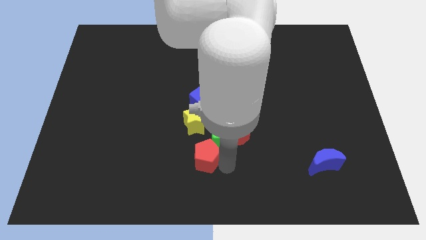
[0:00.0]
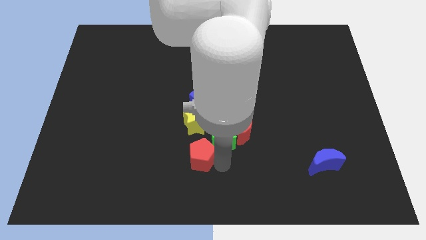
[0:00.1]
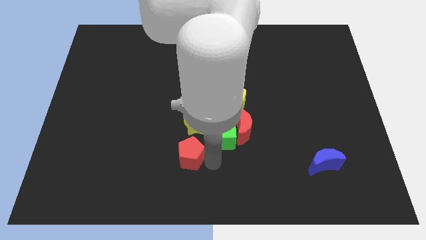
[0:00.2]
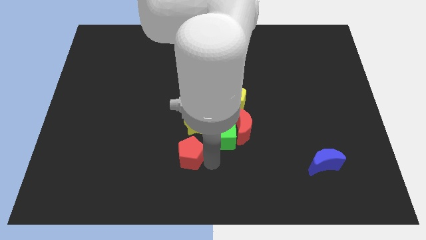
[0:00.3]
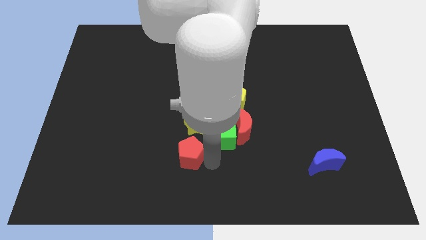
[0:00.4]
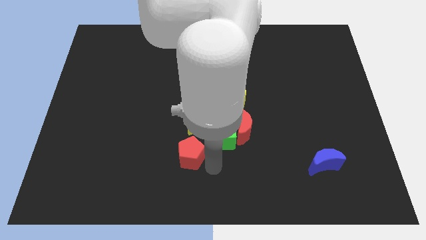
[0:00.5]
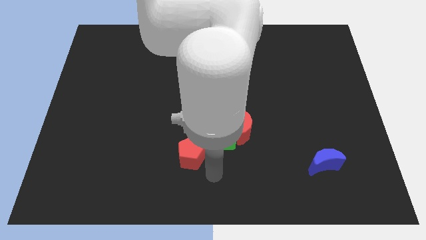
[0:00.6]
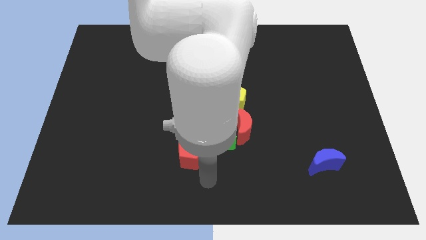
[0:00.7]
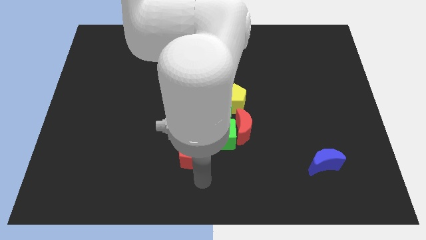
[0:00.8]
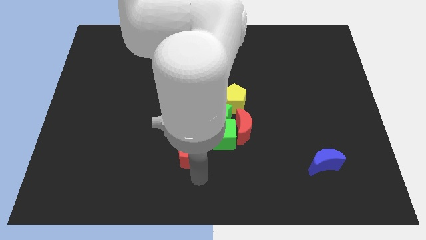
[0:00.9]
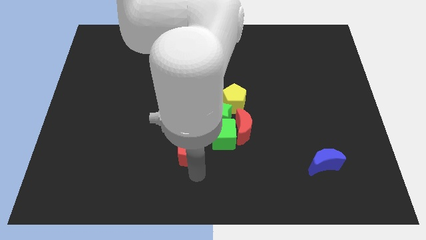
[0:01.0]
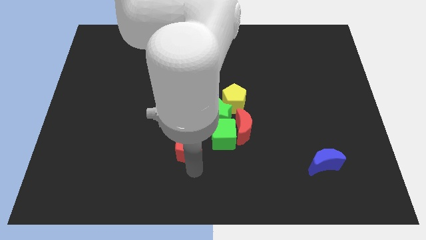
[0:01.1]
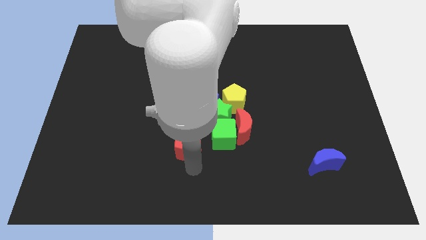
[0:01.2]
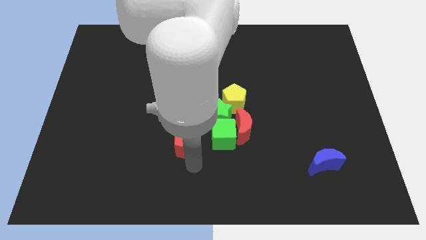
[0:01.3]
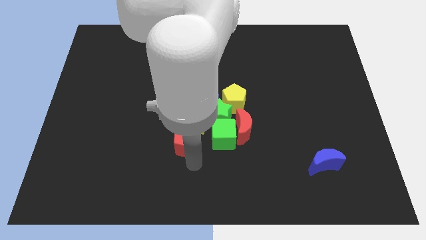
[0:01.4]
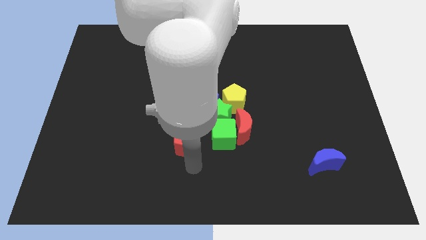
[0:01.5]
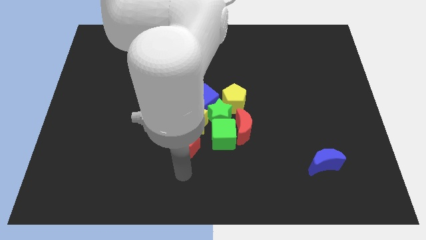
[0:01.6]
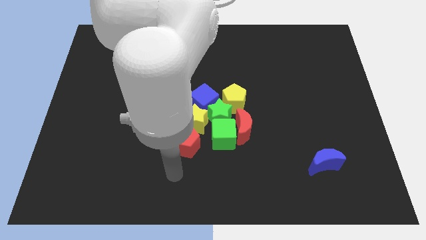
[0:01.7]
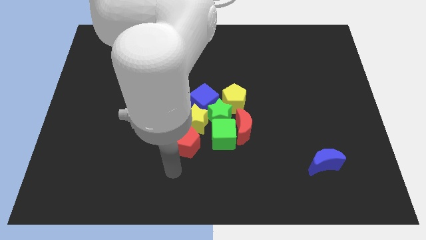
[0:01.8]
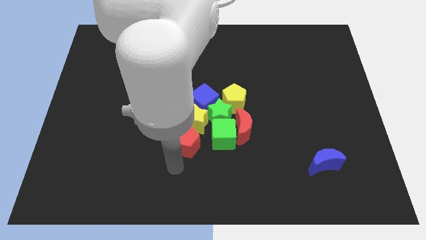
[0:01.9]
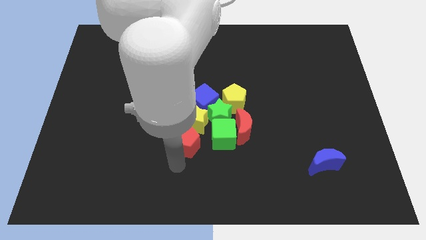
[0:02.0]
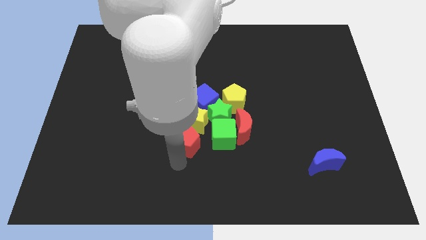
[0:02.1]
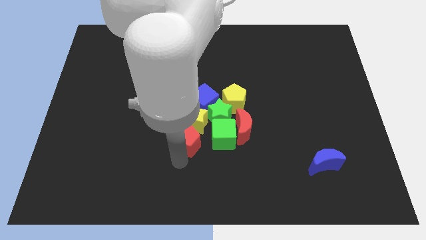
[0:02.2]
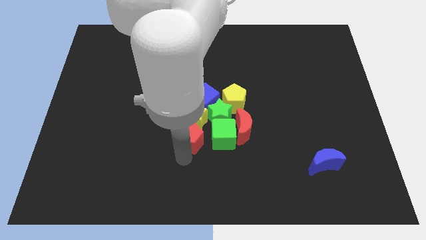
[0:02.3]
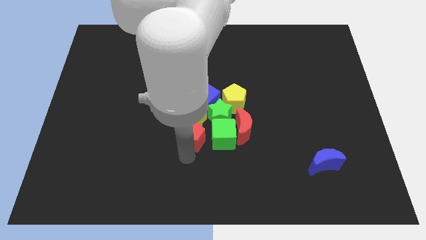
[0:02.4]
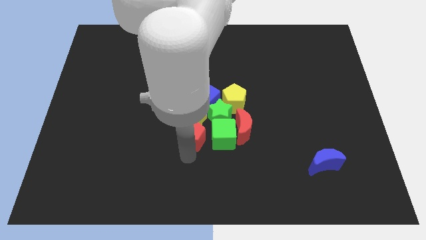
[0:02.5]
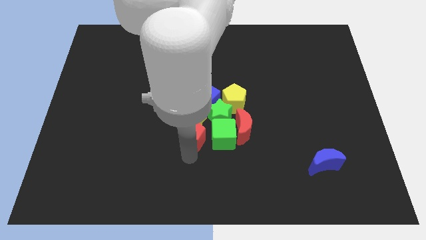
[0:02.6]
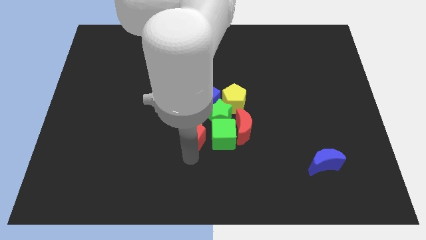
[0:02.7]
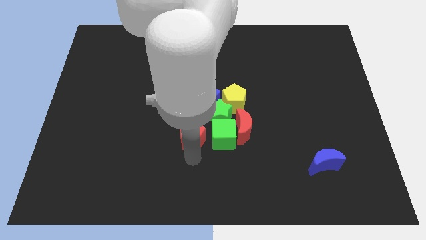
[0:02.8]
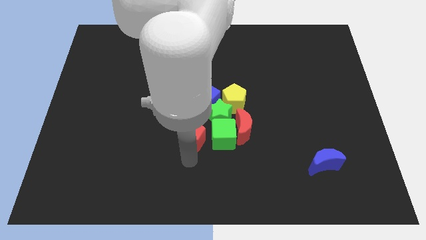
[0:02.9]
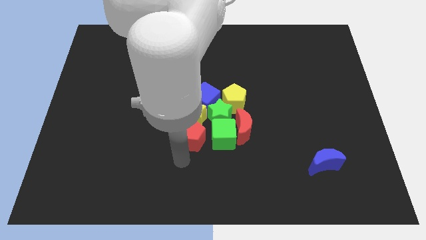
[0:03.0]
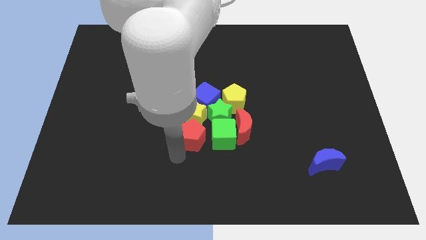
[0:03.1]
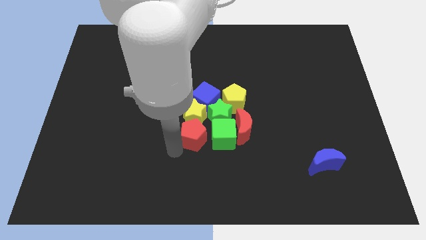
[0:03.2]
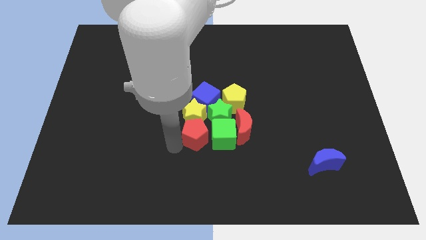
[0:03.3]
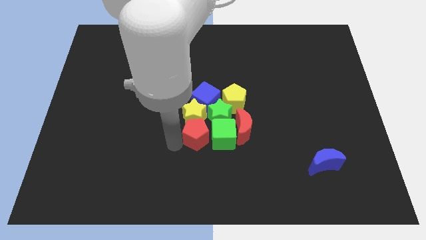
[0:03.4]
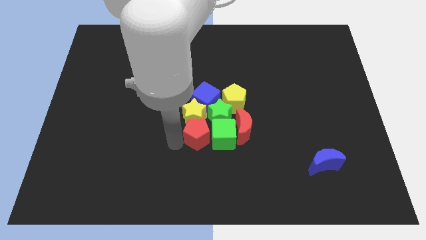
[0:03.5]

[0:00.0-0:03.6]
put the red pentagon below the yellow star

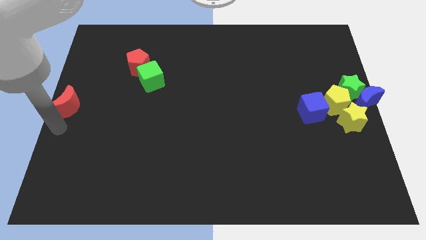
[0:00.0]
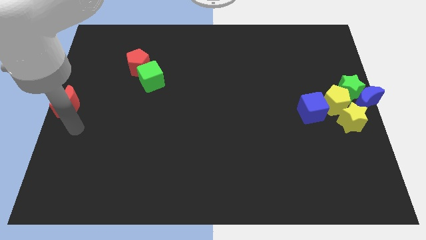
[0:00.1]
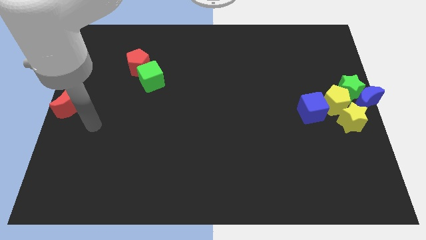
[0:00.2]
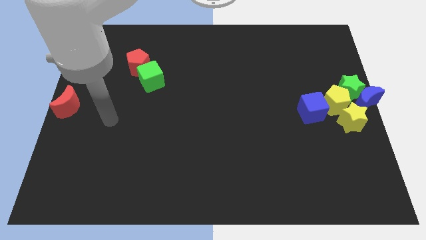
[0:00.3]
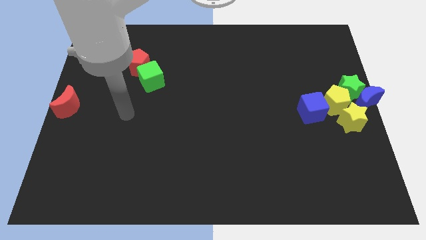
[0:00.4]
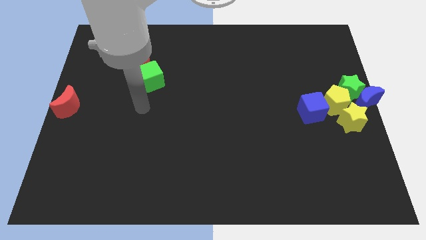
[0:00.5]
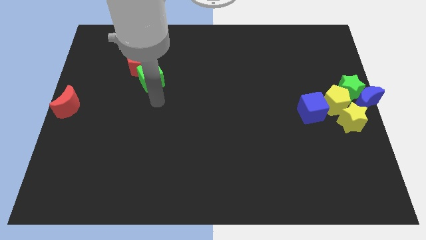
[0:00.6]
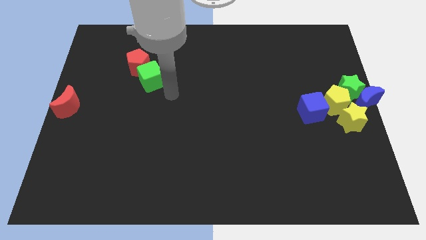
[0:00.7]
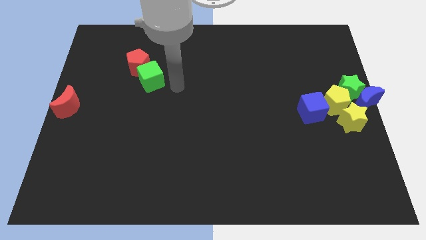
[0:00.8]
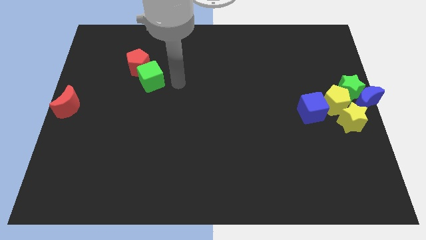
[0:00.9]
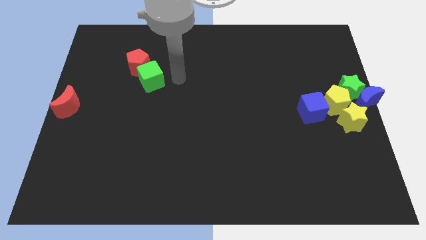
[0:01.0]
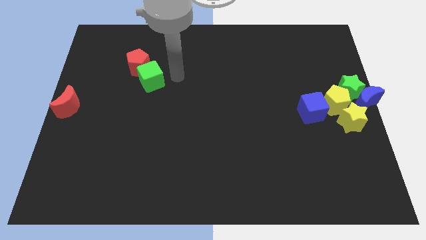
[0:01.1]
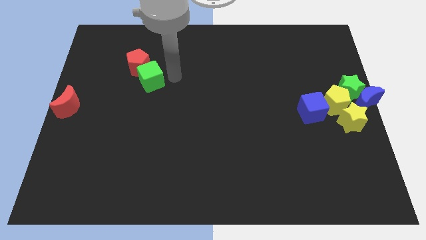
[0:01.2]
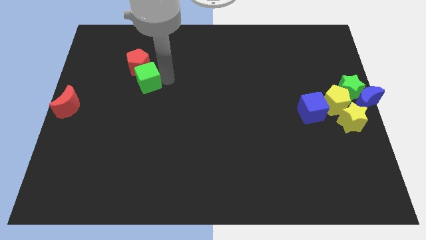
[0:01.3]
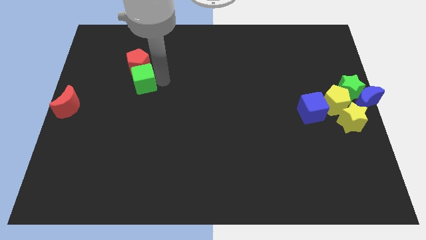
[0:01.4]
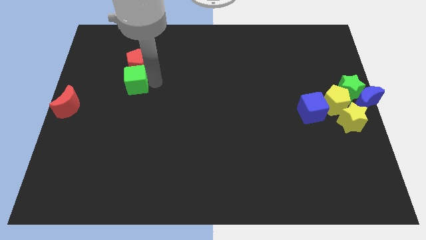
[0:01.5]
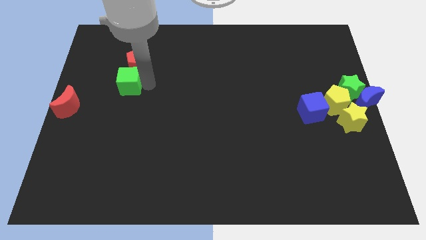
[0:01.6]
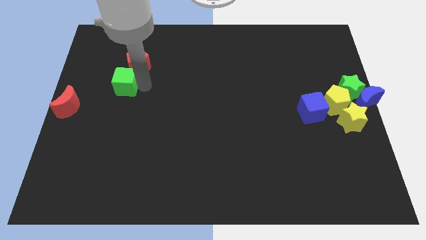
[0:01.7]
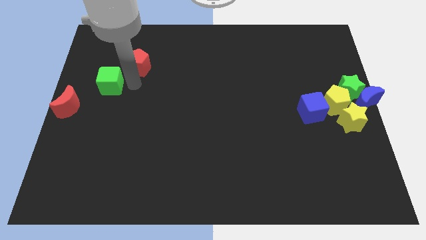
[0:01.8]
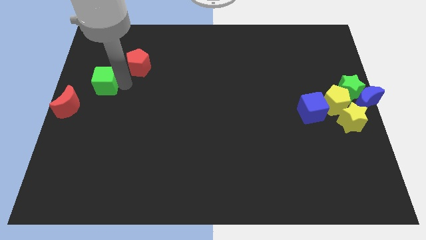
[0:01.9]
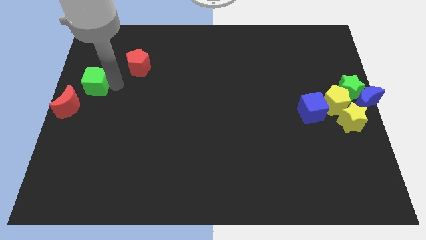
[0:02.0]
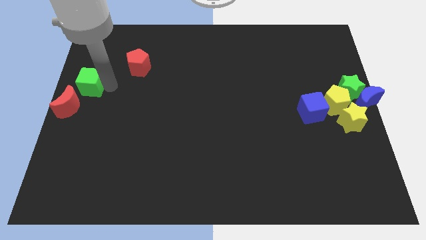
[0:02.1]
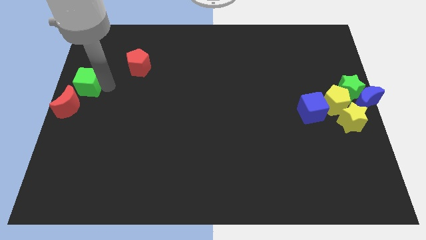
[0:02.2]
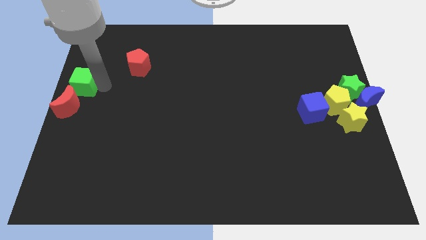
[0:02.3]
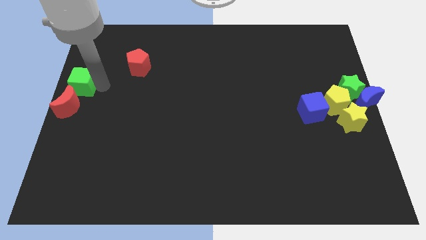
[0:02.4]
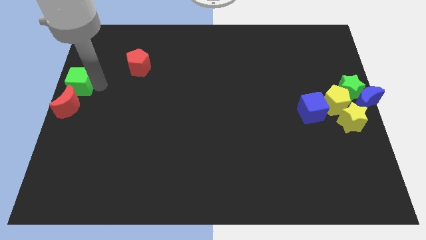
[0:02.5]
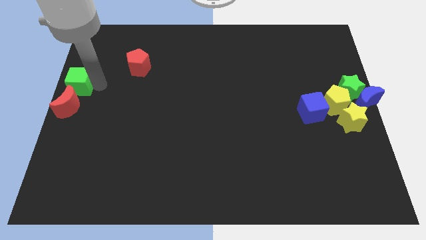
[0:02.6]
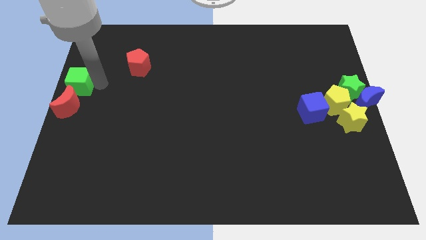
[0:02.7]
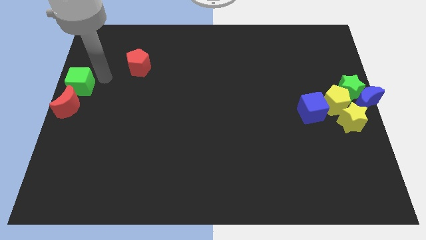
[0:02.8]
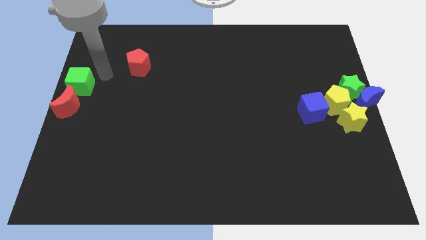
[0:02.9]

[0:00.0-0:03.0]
place green cube above red moon

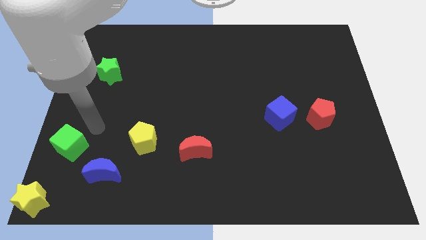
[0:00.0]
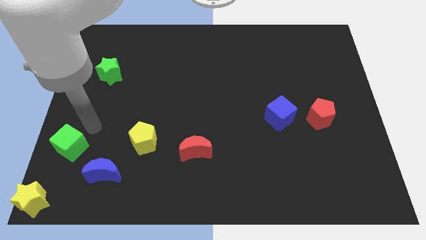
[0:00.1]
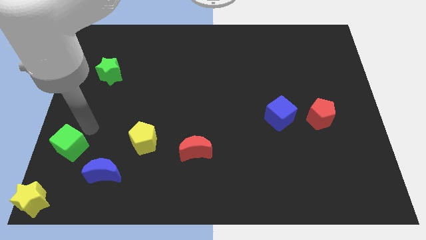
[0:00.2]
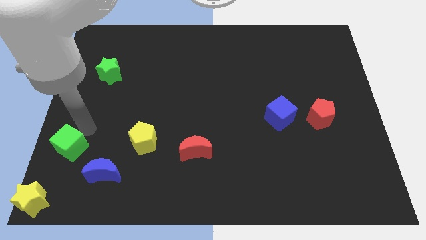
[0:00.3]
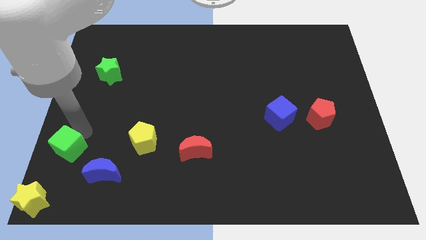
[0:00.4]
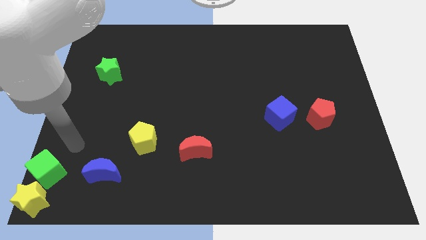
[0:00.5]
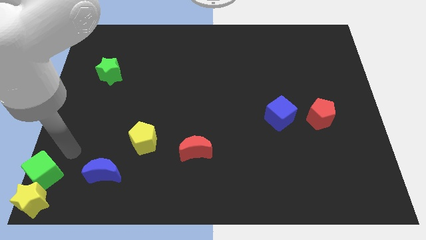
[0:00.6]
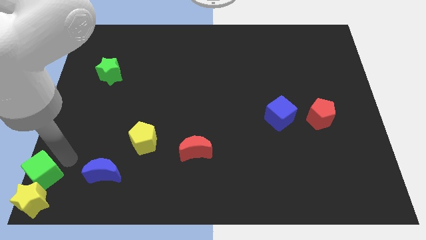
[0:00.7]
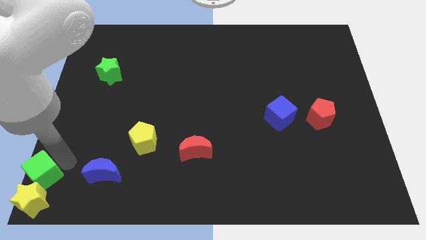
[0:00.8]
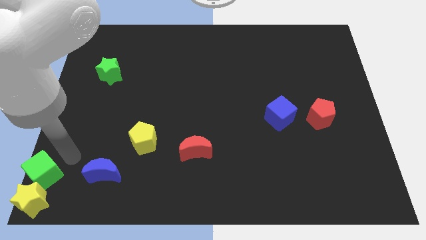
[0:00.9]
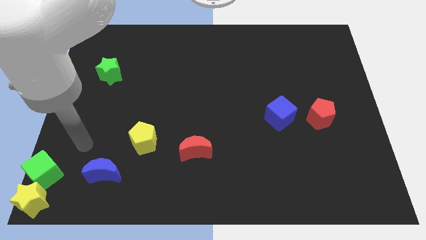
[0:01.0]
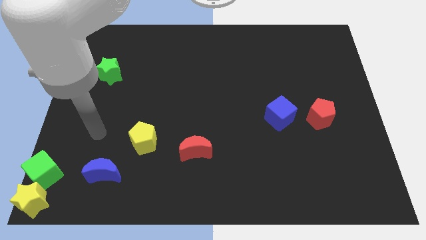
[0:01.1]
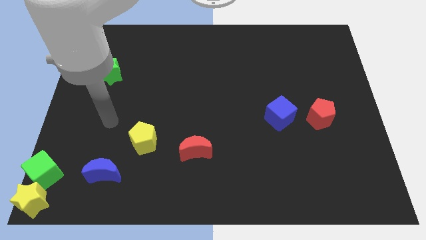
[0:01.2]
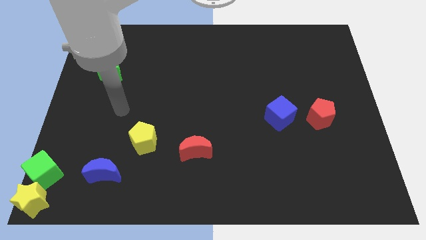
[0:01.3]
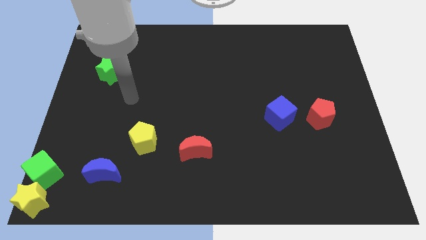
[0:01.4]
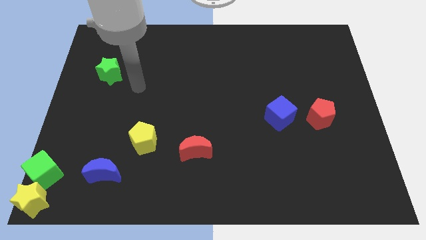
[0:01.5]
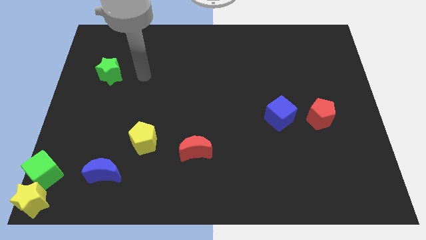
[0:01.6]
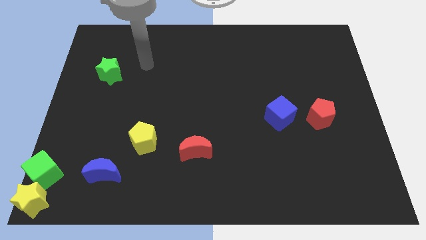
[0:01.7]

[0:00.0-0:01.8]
move the green cube to the top of the yellow star

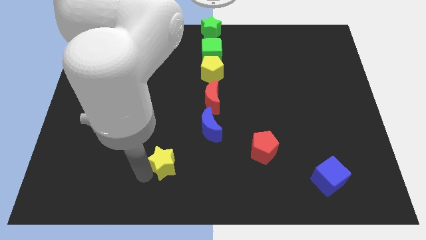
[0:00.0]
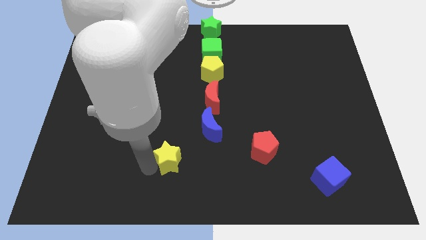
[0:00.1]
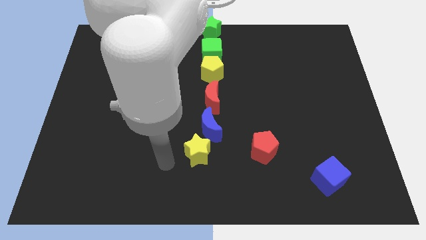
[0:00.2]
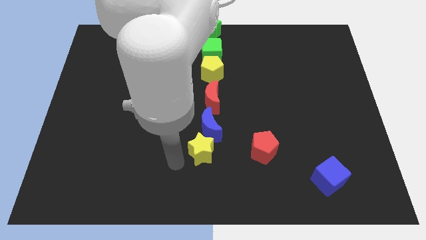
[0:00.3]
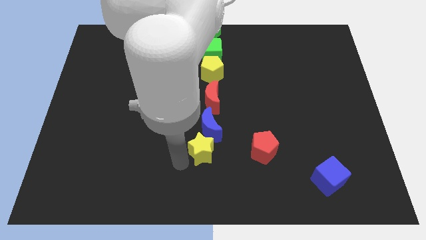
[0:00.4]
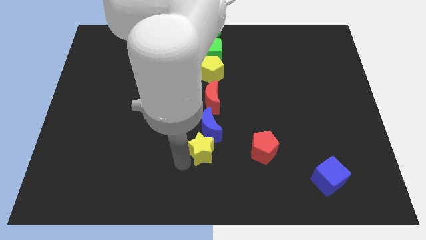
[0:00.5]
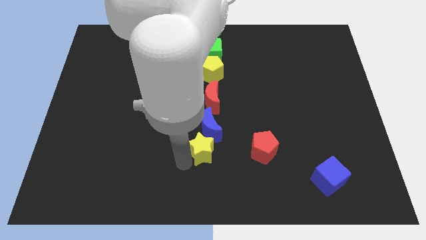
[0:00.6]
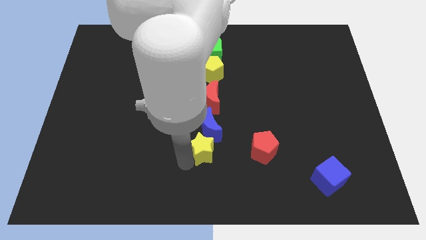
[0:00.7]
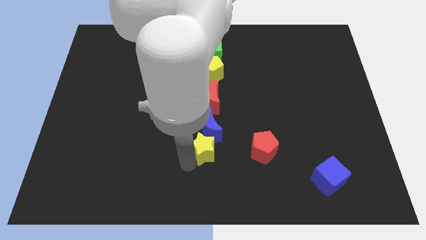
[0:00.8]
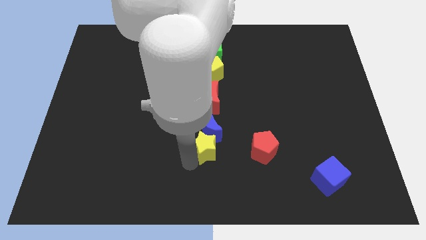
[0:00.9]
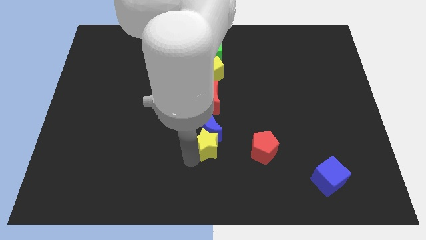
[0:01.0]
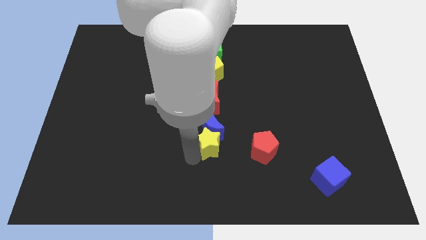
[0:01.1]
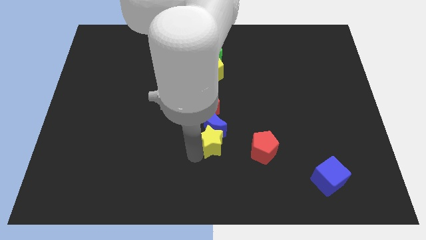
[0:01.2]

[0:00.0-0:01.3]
move the yellow star into the blue moon
